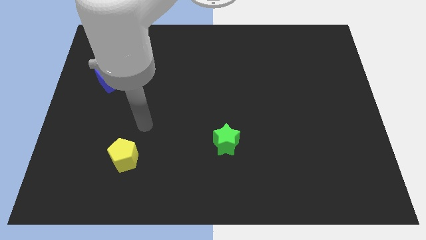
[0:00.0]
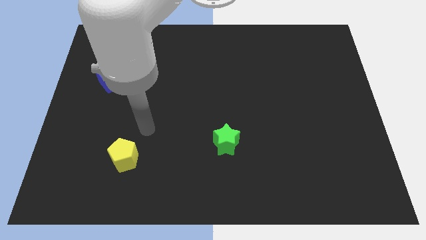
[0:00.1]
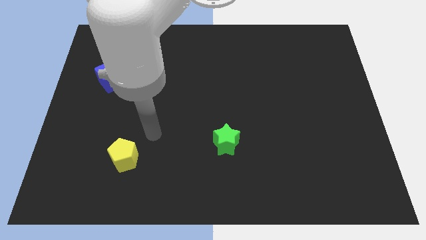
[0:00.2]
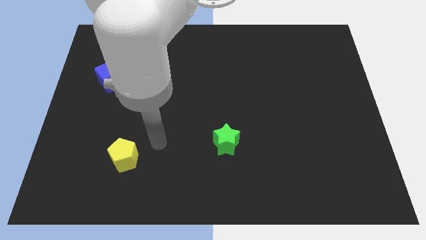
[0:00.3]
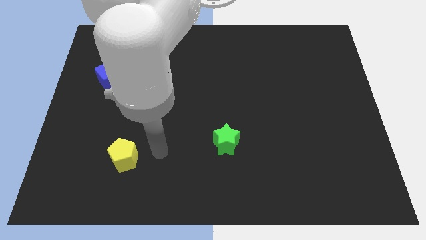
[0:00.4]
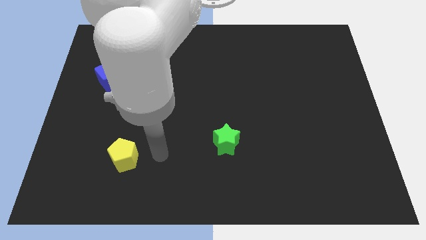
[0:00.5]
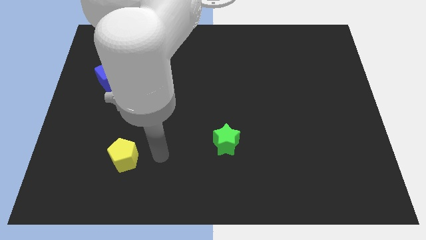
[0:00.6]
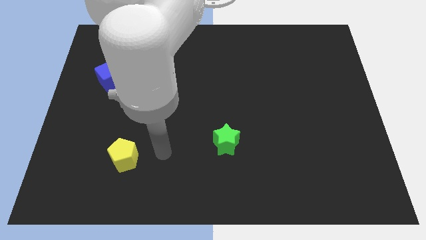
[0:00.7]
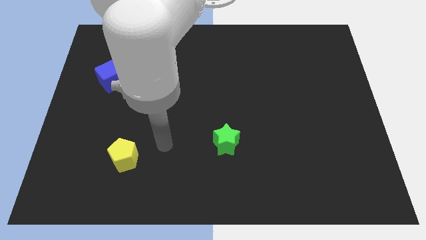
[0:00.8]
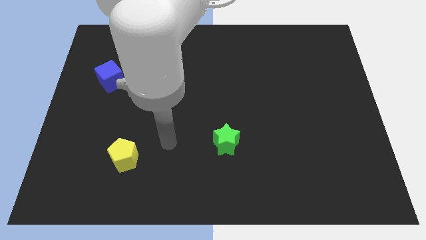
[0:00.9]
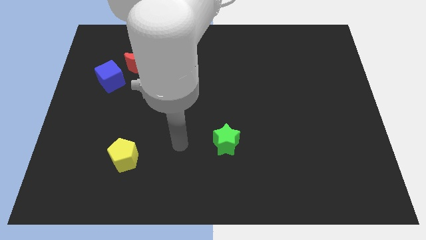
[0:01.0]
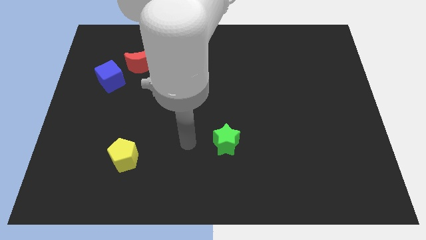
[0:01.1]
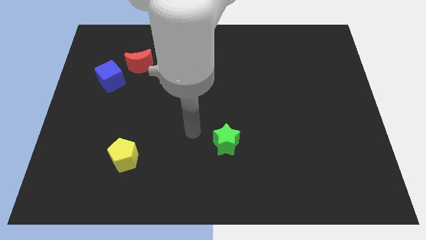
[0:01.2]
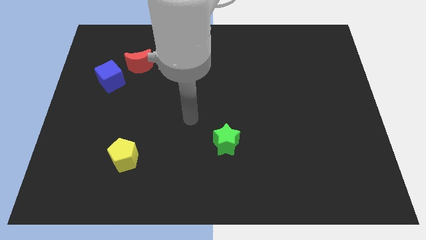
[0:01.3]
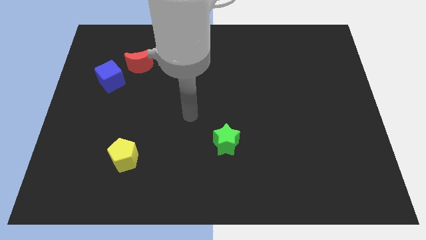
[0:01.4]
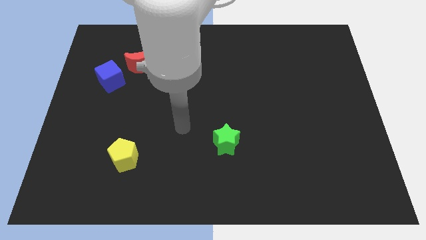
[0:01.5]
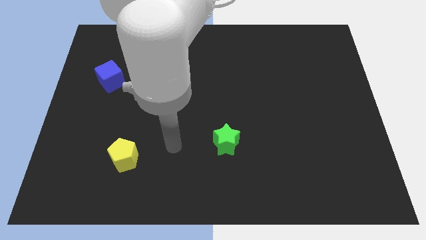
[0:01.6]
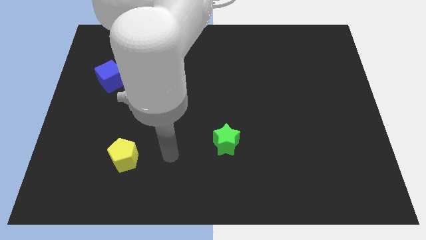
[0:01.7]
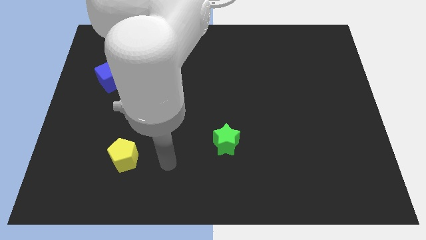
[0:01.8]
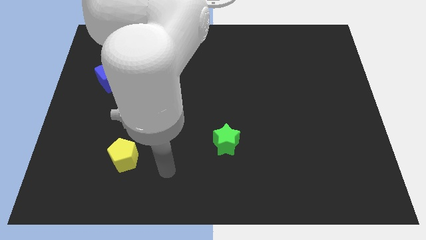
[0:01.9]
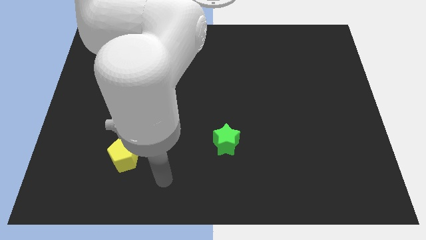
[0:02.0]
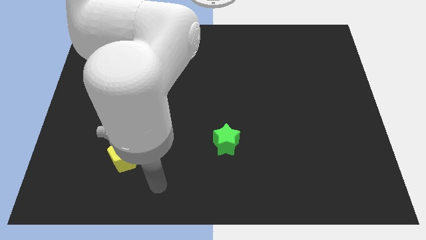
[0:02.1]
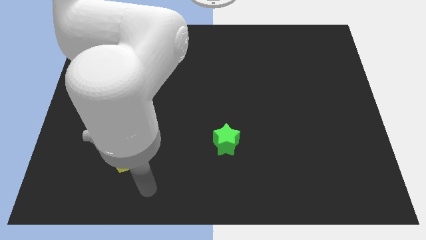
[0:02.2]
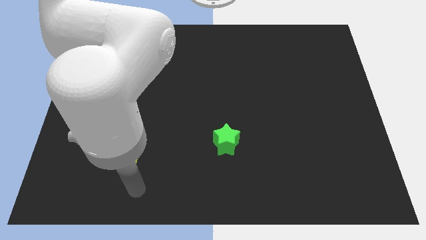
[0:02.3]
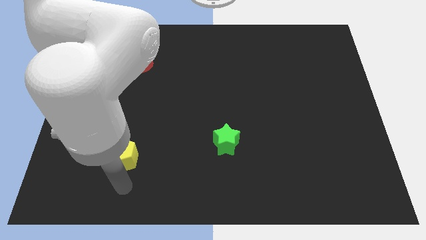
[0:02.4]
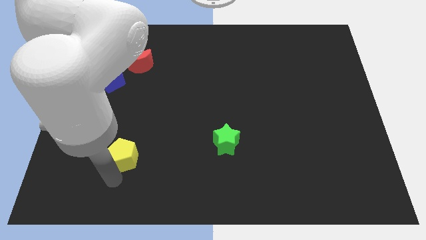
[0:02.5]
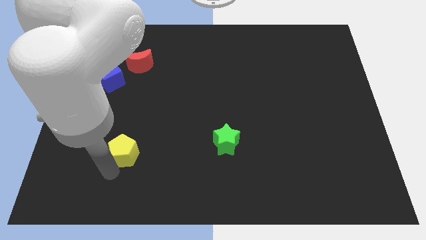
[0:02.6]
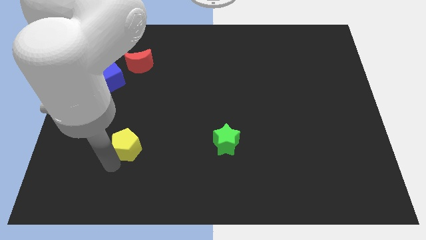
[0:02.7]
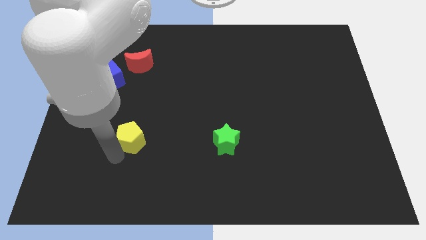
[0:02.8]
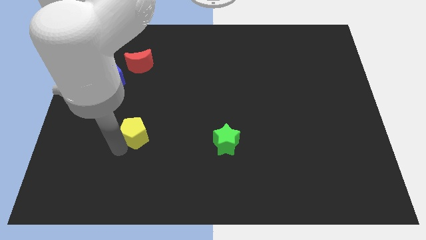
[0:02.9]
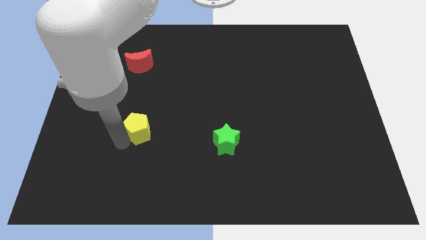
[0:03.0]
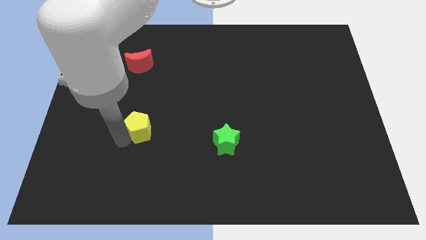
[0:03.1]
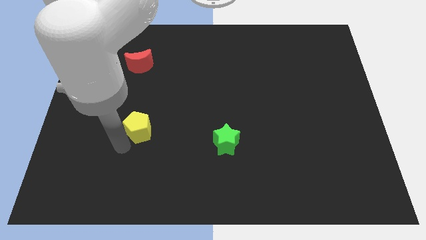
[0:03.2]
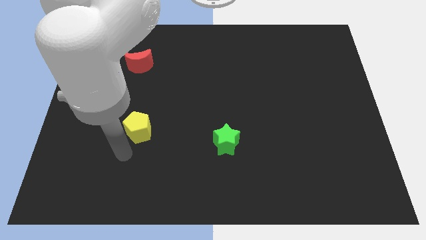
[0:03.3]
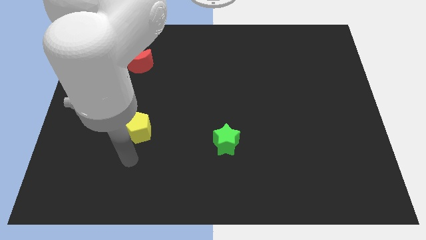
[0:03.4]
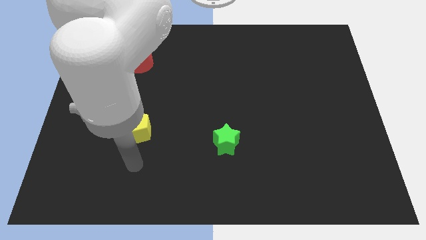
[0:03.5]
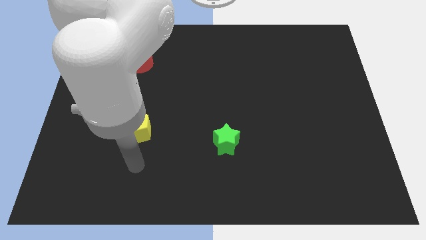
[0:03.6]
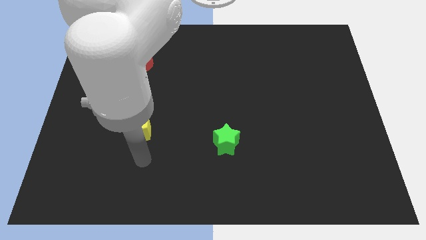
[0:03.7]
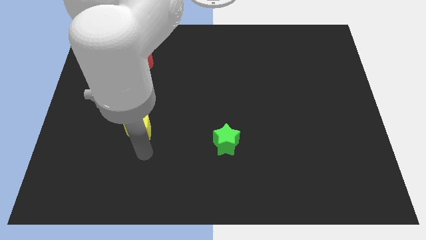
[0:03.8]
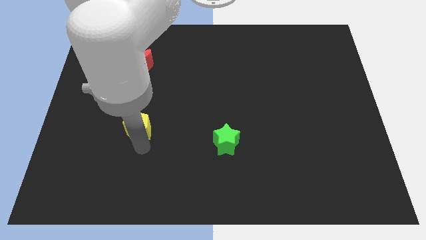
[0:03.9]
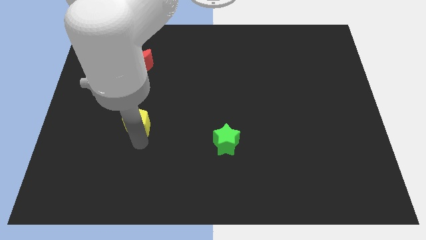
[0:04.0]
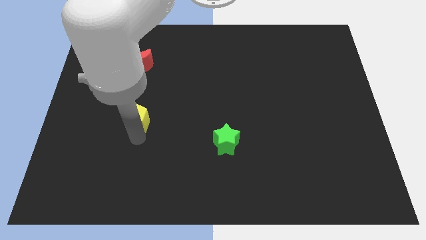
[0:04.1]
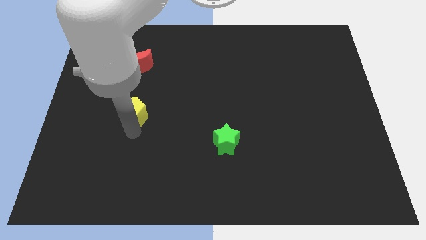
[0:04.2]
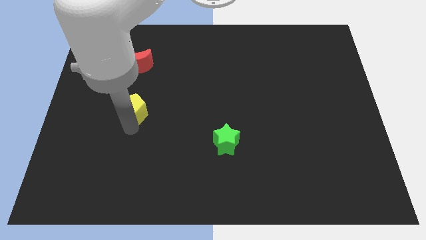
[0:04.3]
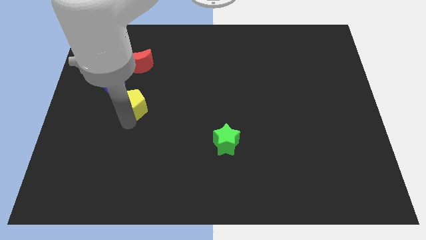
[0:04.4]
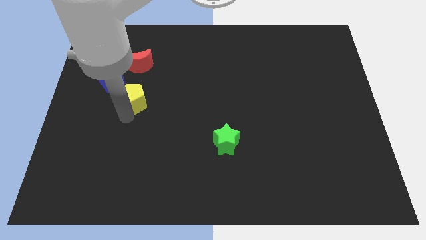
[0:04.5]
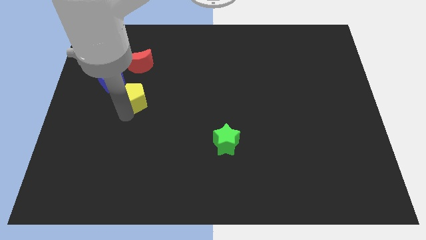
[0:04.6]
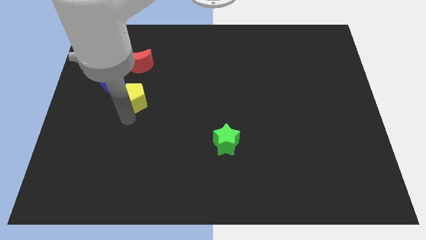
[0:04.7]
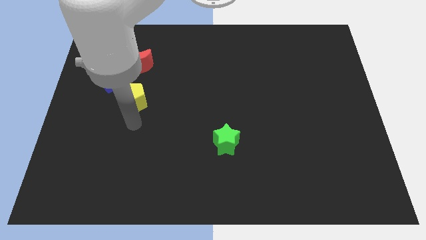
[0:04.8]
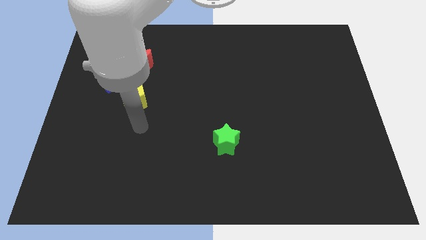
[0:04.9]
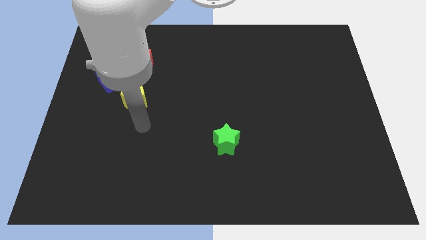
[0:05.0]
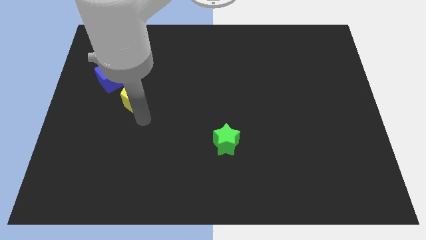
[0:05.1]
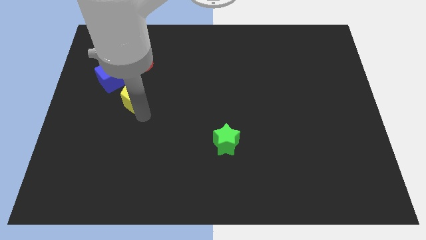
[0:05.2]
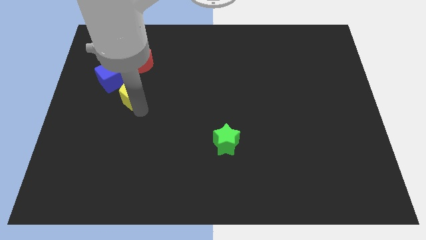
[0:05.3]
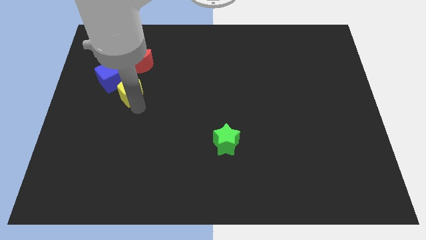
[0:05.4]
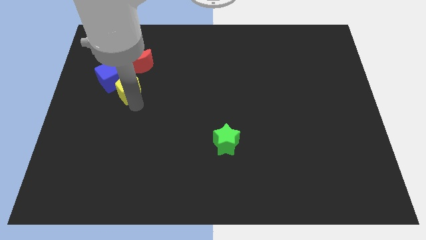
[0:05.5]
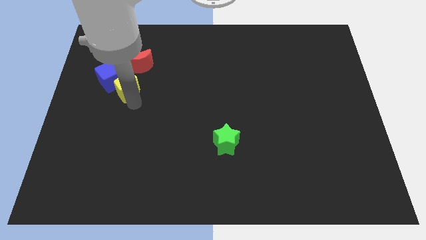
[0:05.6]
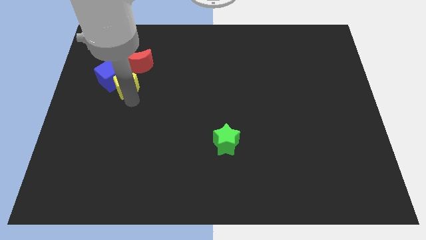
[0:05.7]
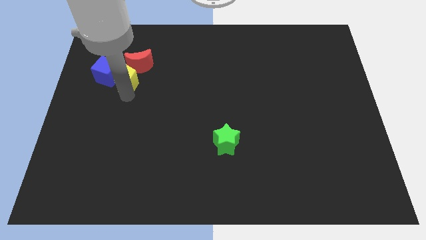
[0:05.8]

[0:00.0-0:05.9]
put the yellow block towards the blue cube

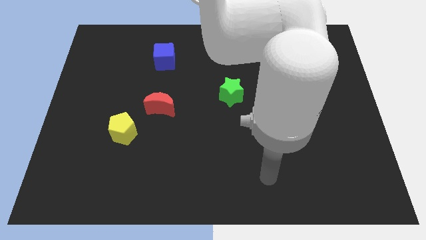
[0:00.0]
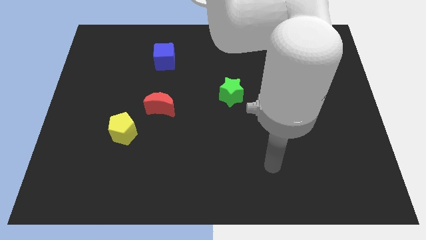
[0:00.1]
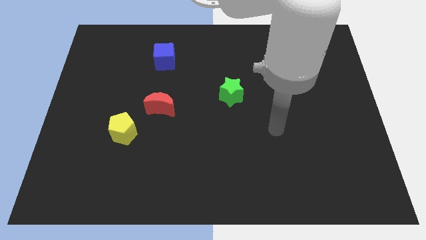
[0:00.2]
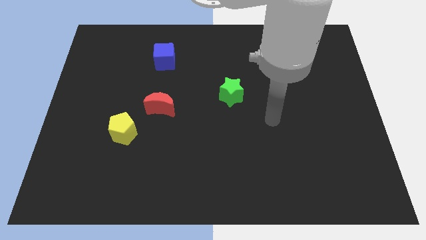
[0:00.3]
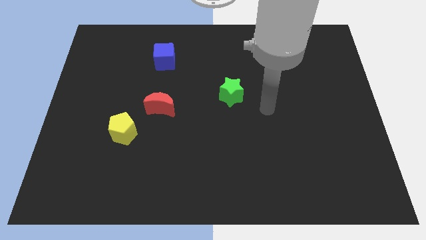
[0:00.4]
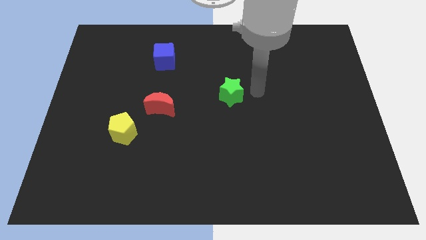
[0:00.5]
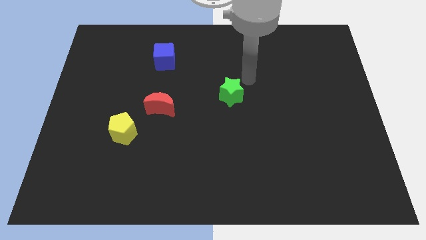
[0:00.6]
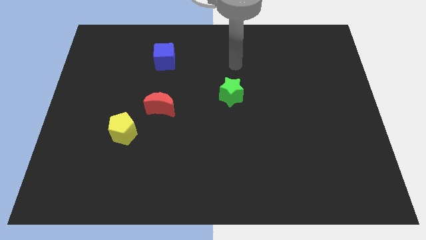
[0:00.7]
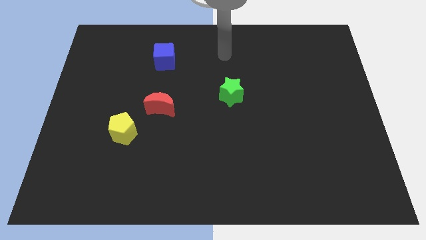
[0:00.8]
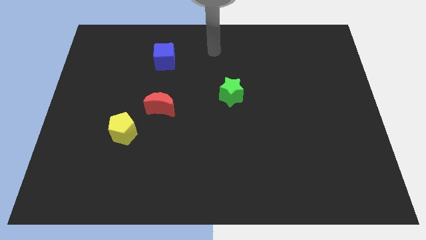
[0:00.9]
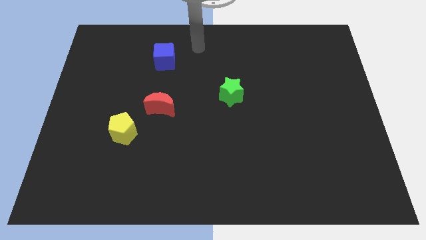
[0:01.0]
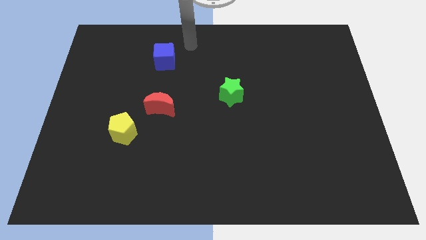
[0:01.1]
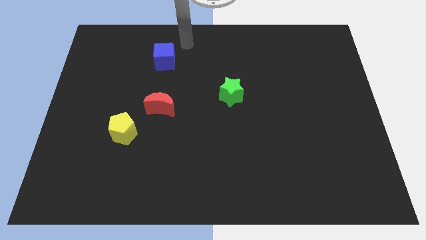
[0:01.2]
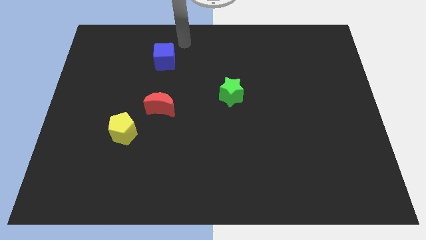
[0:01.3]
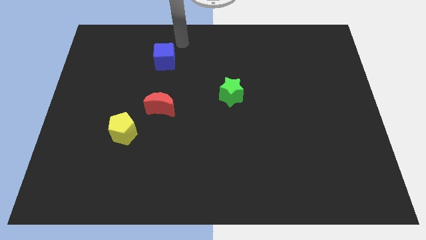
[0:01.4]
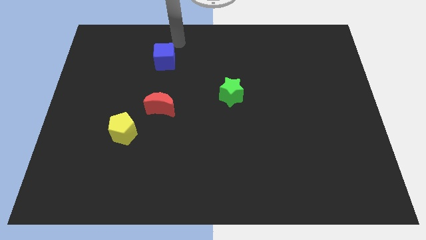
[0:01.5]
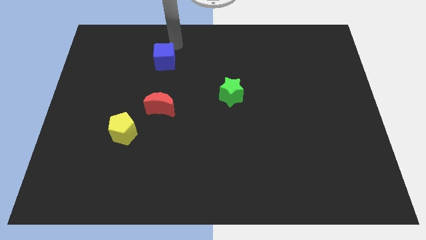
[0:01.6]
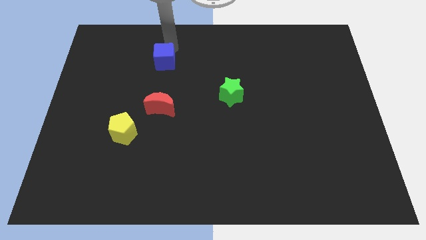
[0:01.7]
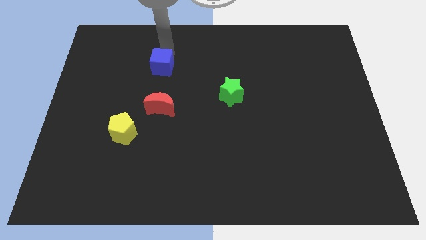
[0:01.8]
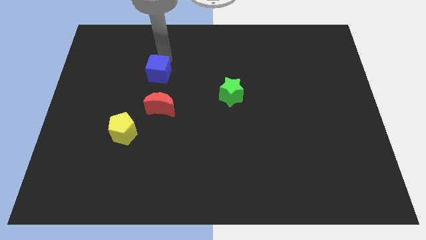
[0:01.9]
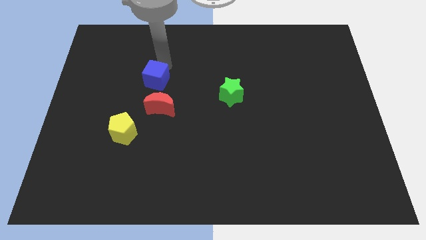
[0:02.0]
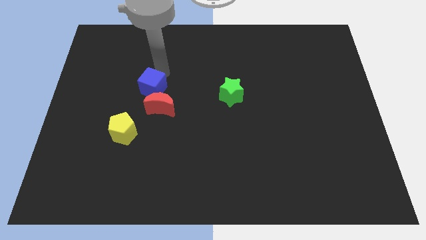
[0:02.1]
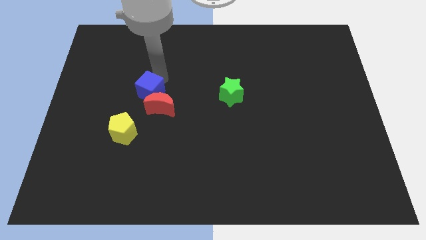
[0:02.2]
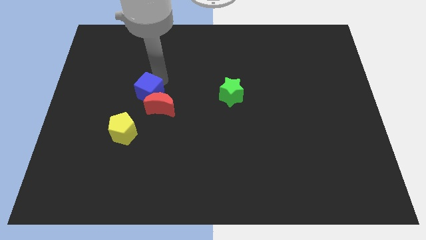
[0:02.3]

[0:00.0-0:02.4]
push the blue block close to the red block

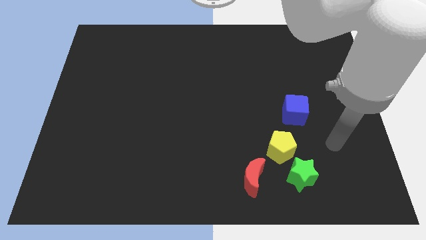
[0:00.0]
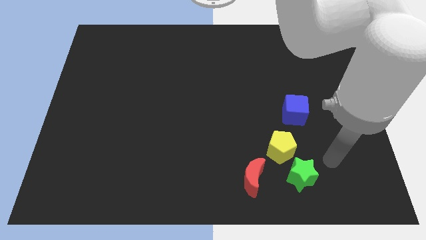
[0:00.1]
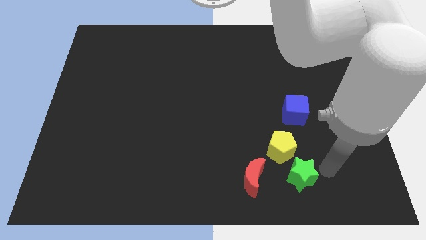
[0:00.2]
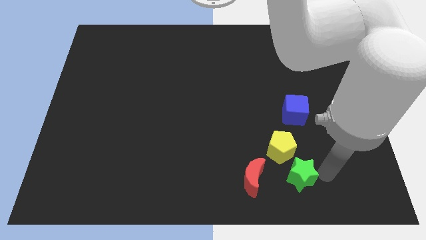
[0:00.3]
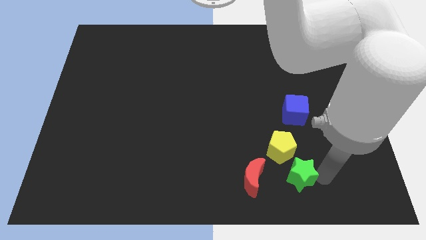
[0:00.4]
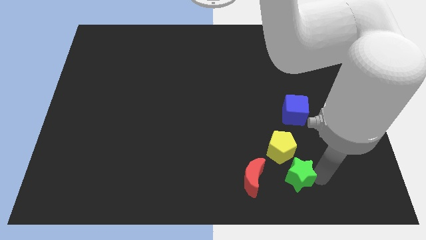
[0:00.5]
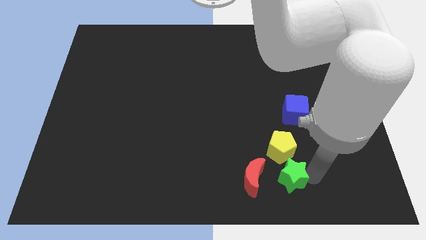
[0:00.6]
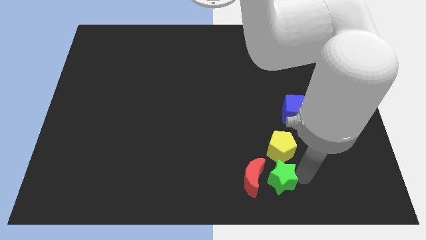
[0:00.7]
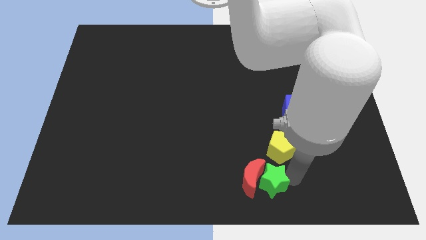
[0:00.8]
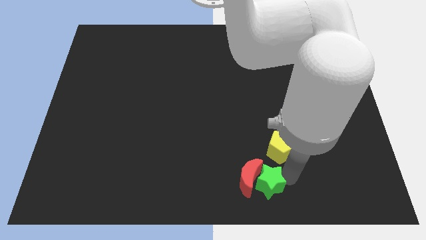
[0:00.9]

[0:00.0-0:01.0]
put the green block towards the red block
